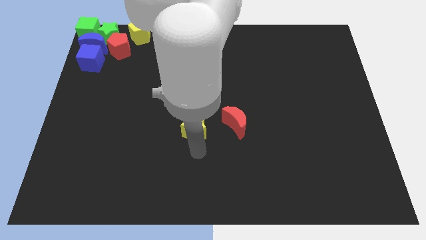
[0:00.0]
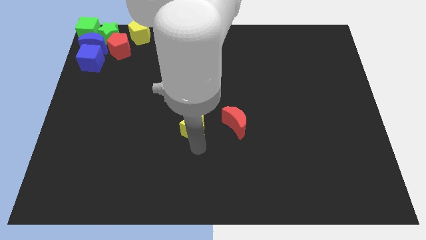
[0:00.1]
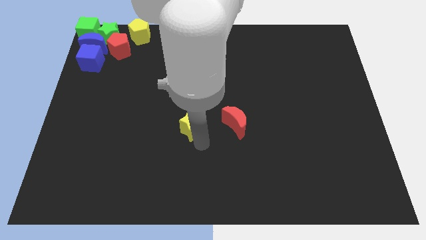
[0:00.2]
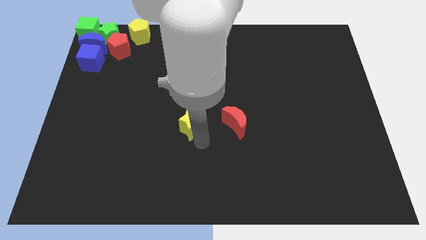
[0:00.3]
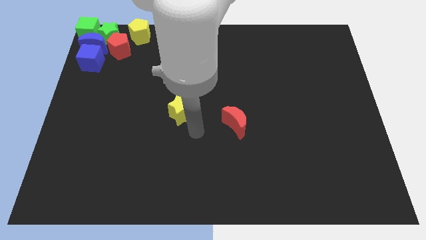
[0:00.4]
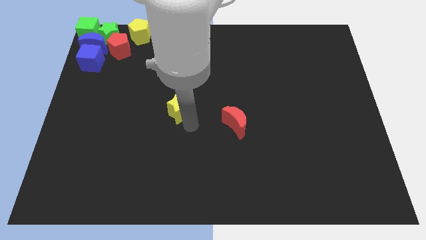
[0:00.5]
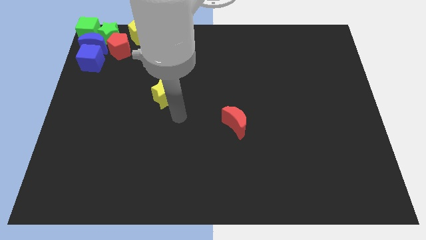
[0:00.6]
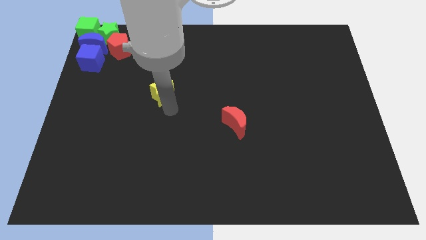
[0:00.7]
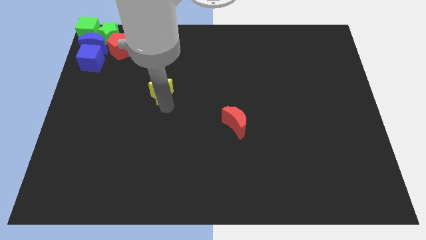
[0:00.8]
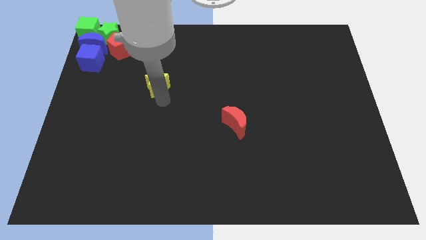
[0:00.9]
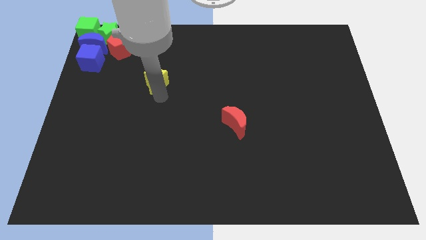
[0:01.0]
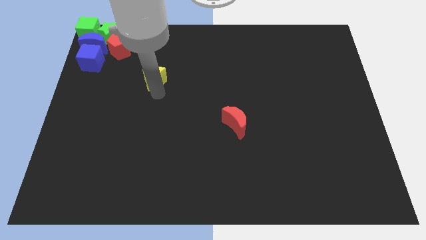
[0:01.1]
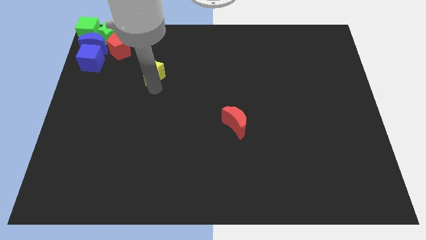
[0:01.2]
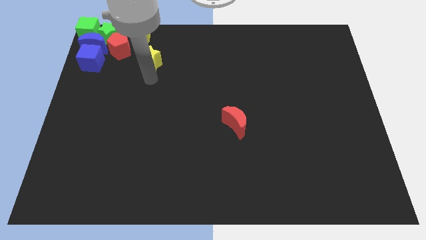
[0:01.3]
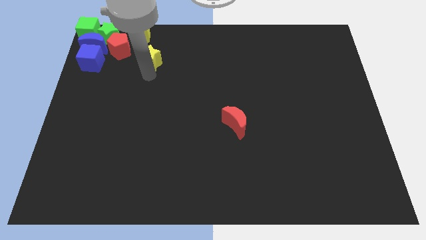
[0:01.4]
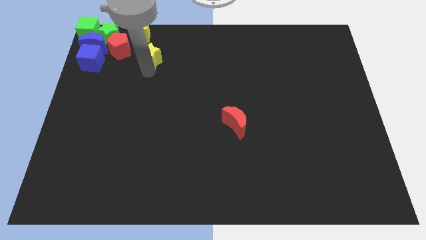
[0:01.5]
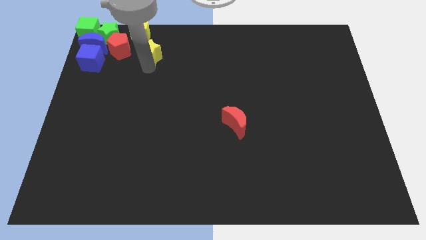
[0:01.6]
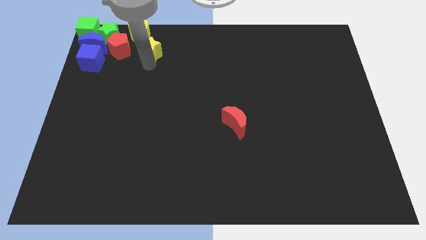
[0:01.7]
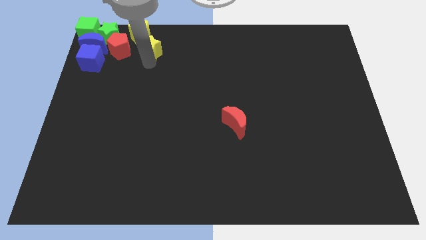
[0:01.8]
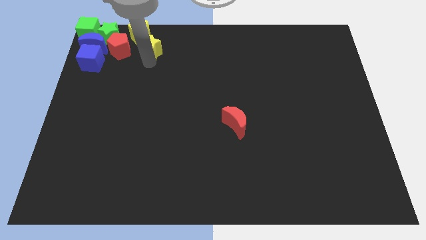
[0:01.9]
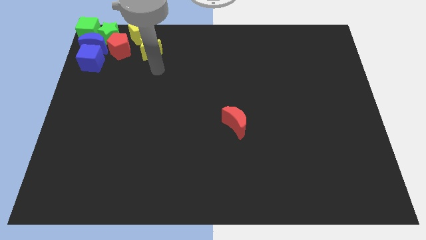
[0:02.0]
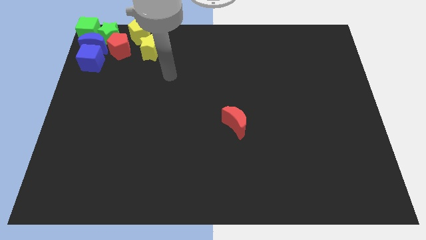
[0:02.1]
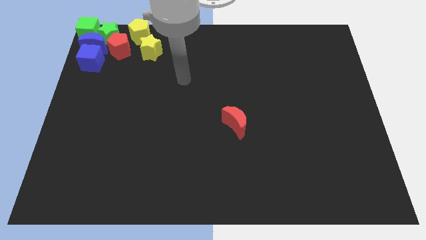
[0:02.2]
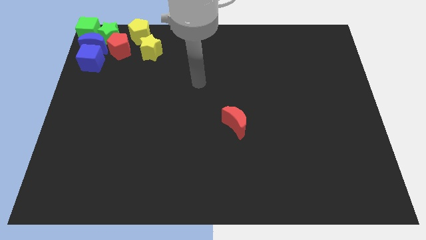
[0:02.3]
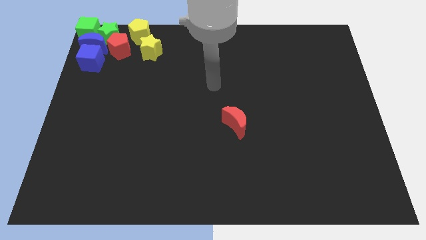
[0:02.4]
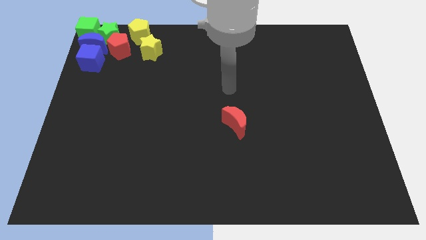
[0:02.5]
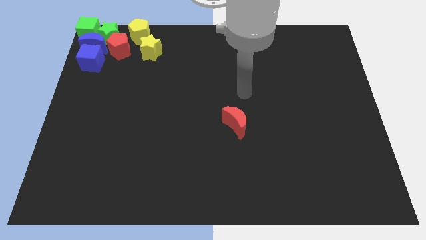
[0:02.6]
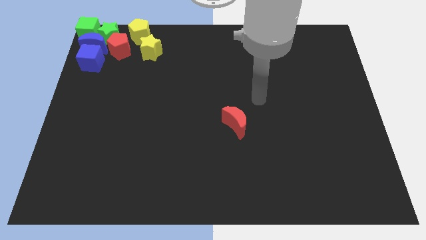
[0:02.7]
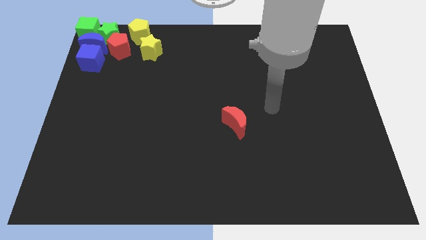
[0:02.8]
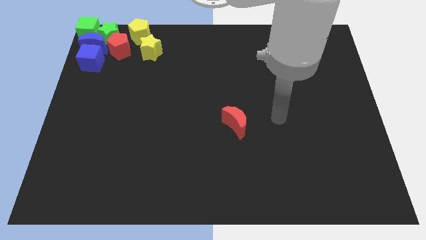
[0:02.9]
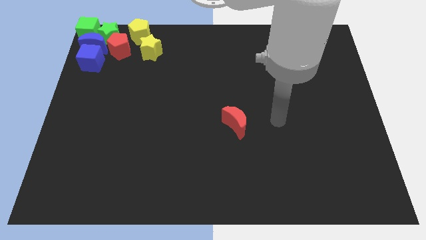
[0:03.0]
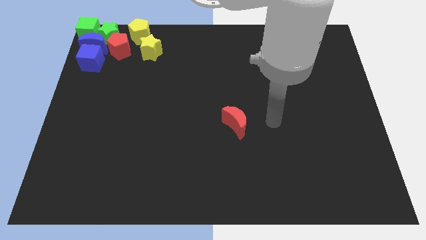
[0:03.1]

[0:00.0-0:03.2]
place the yellow star below the yellow pentagon

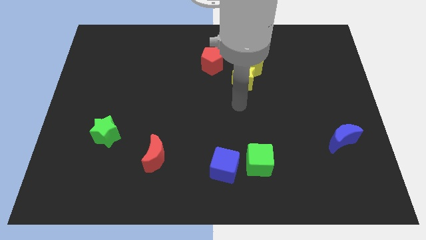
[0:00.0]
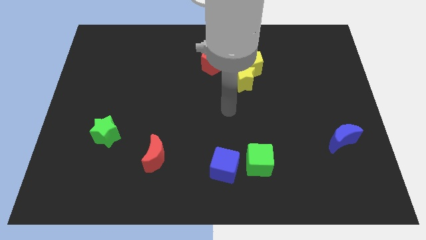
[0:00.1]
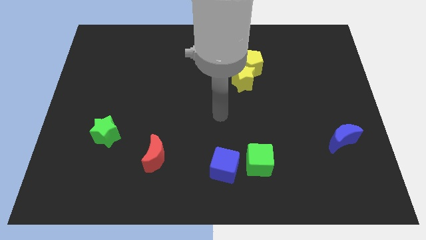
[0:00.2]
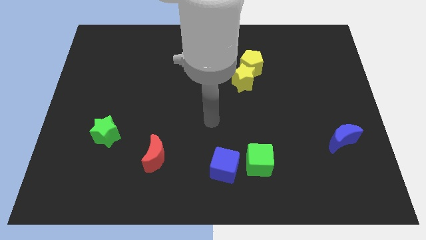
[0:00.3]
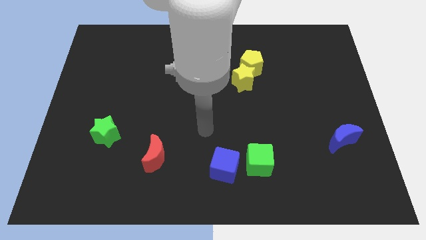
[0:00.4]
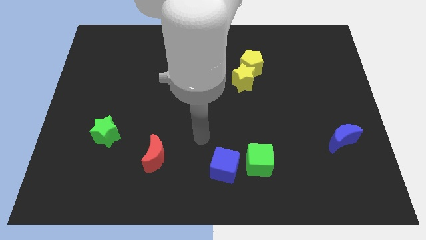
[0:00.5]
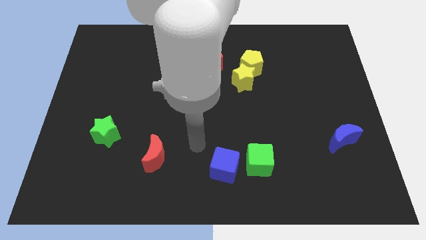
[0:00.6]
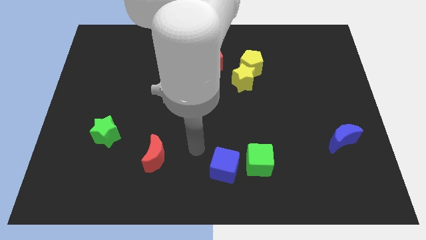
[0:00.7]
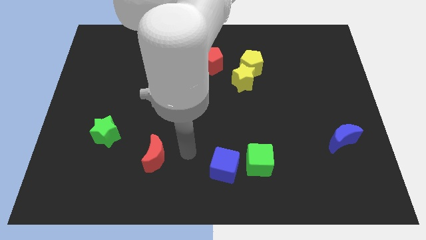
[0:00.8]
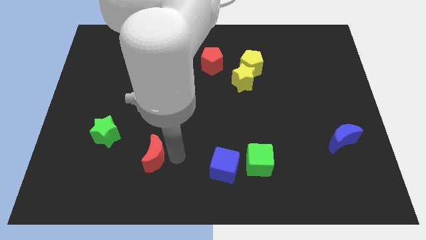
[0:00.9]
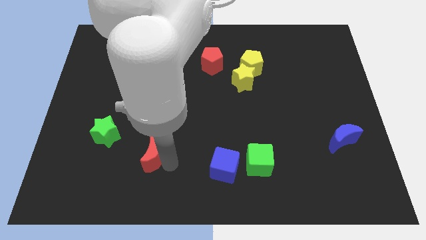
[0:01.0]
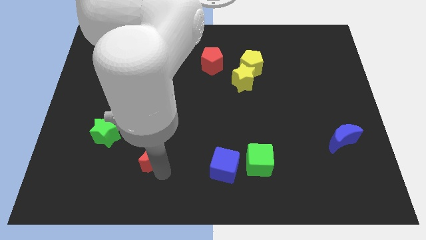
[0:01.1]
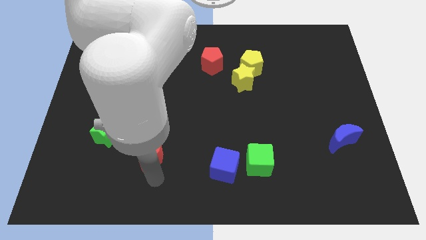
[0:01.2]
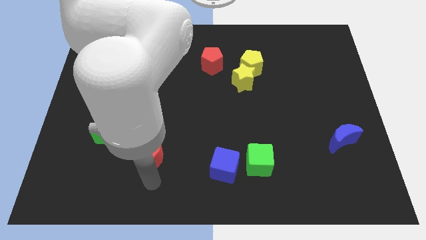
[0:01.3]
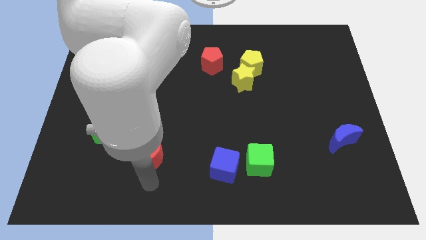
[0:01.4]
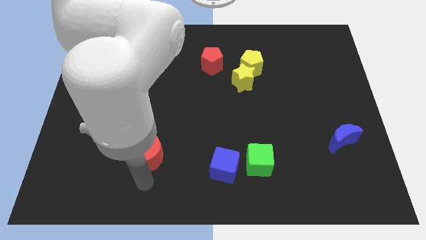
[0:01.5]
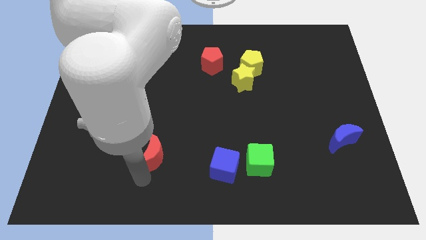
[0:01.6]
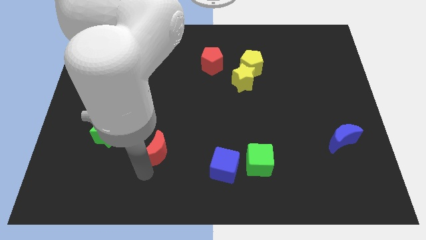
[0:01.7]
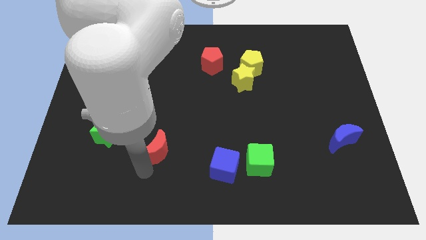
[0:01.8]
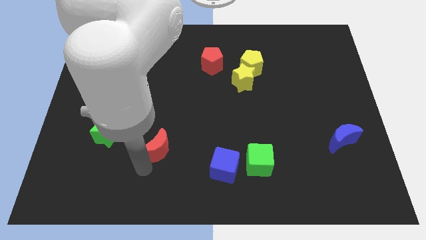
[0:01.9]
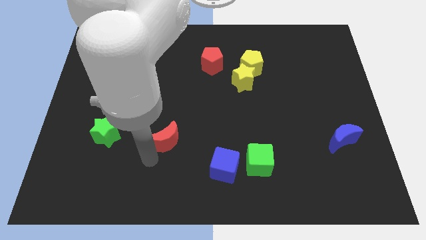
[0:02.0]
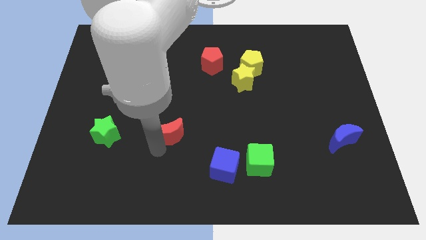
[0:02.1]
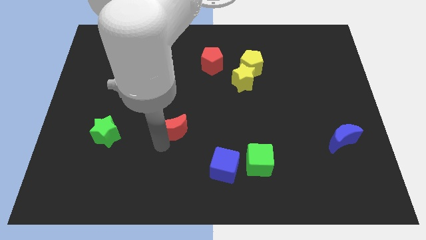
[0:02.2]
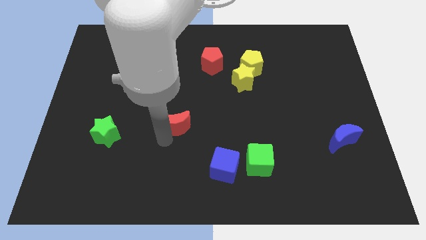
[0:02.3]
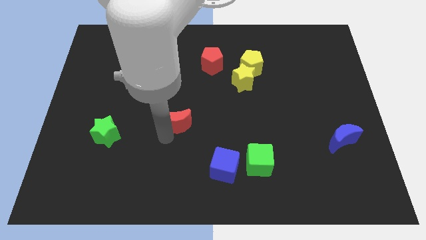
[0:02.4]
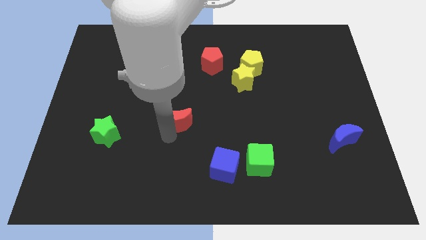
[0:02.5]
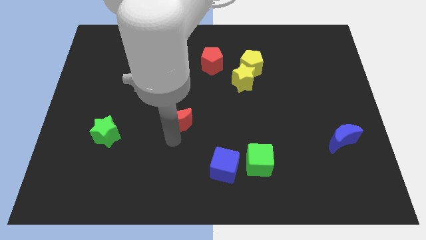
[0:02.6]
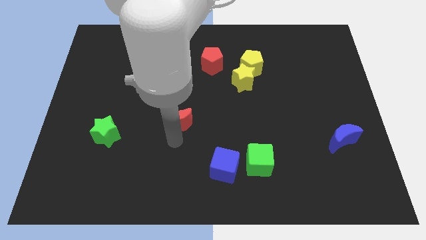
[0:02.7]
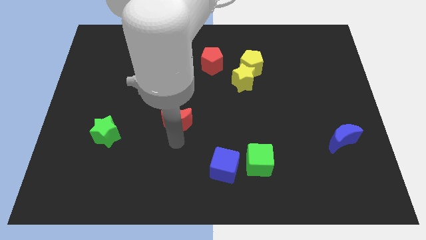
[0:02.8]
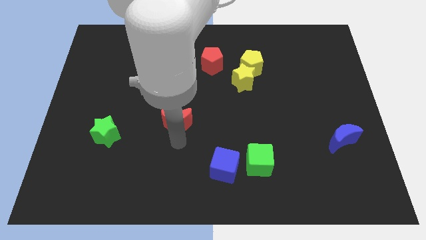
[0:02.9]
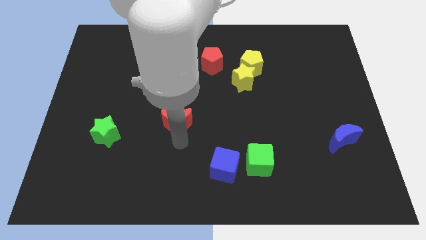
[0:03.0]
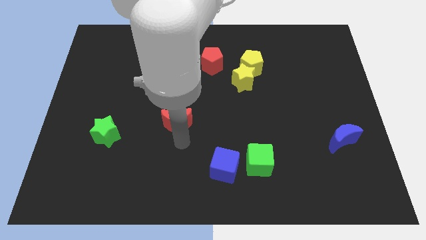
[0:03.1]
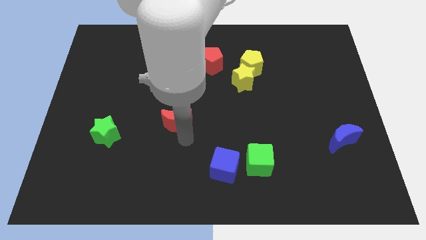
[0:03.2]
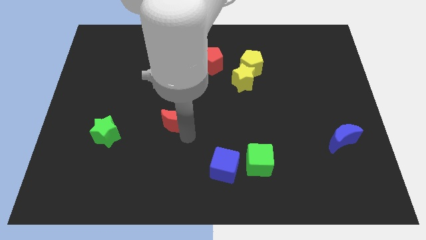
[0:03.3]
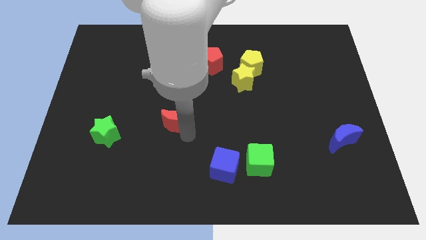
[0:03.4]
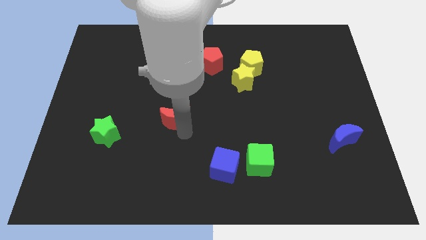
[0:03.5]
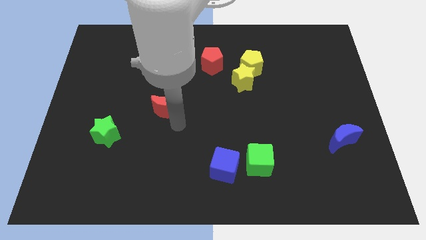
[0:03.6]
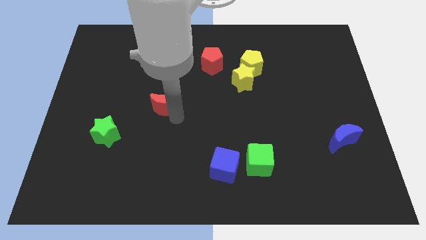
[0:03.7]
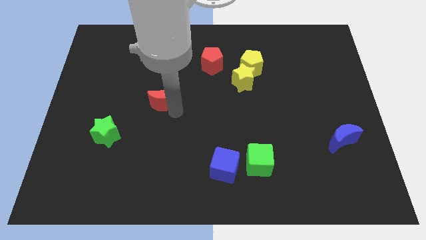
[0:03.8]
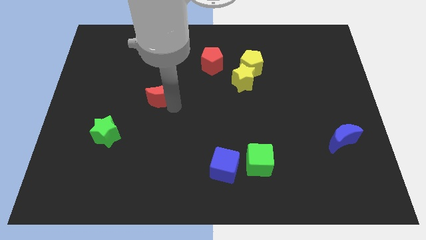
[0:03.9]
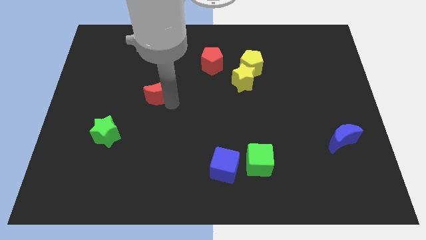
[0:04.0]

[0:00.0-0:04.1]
make a diagonal line with the red moon green star and red pentagon

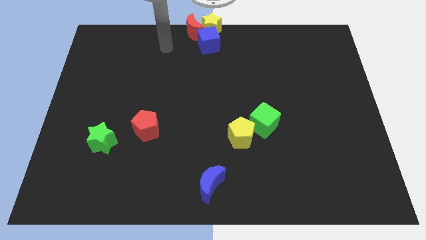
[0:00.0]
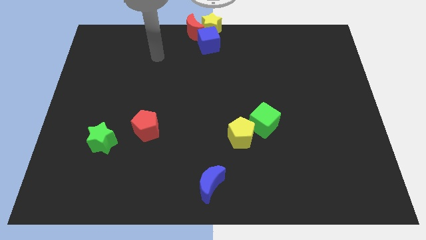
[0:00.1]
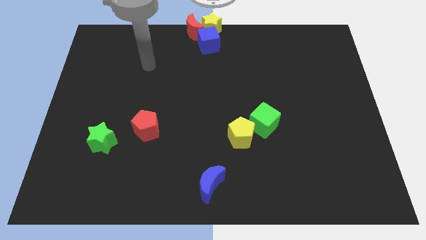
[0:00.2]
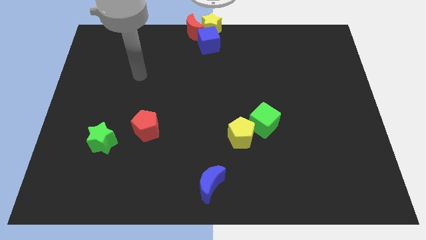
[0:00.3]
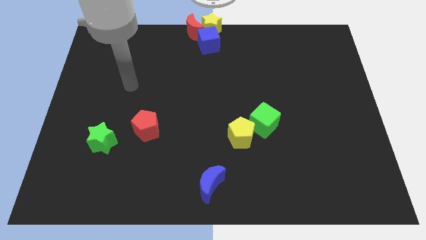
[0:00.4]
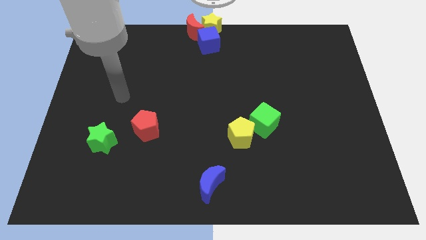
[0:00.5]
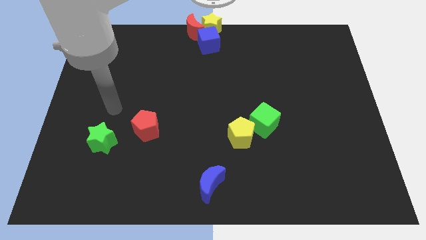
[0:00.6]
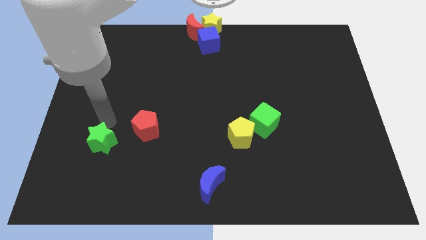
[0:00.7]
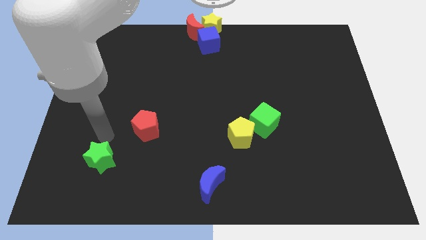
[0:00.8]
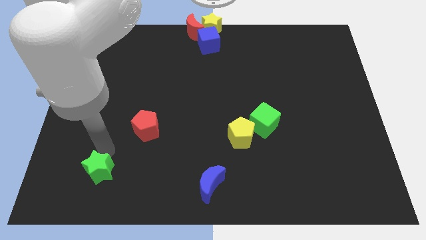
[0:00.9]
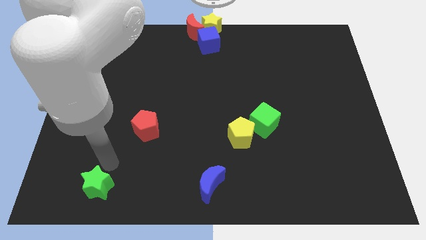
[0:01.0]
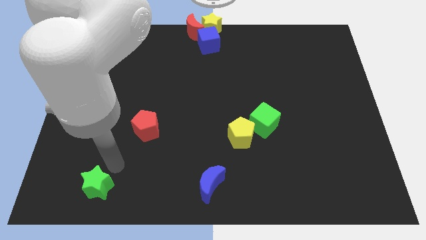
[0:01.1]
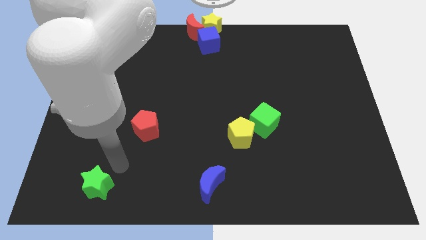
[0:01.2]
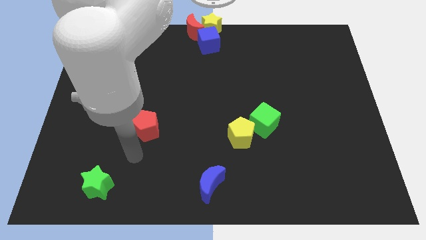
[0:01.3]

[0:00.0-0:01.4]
push the green star slightly towards down
